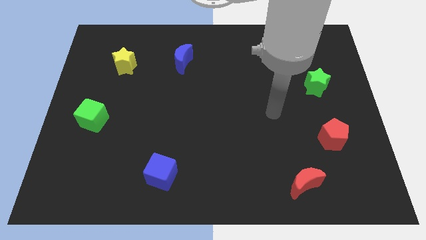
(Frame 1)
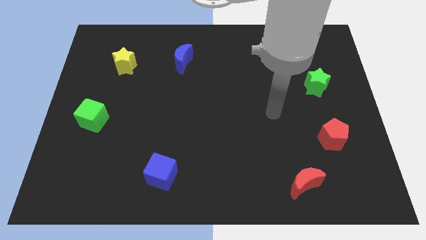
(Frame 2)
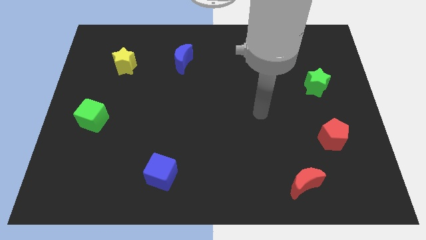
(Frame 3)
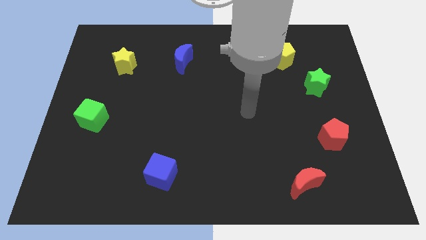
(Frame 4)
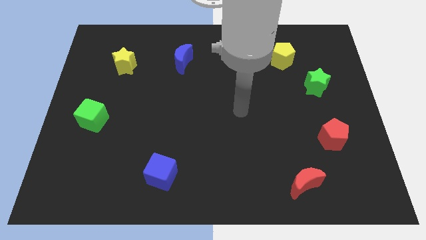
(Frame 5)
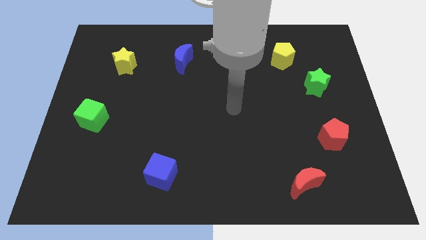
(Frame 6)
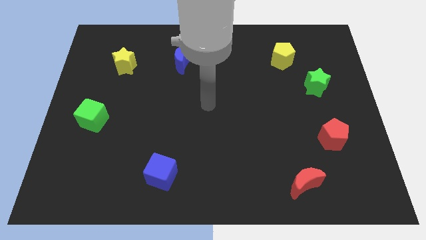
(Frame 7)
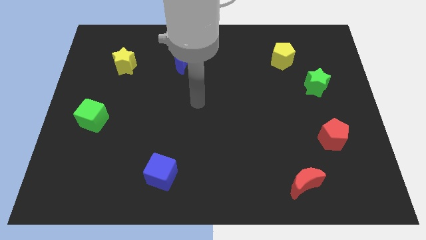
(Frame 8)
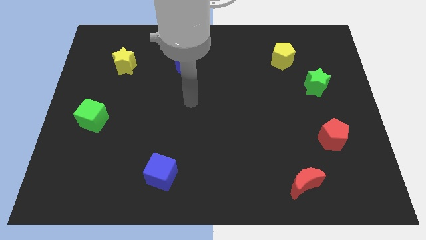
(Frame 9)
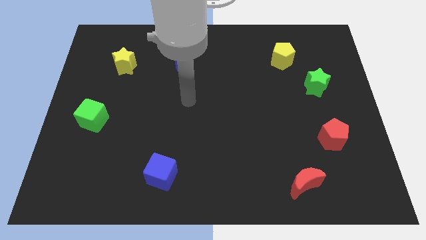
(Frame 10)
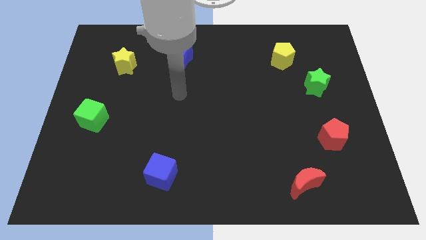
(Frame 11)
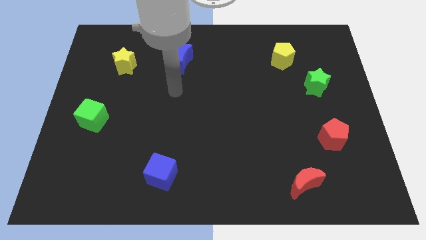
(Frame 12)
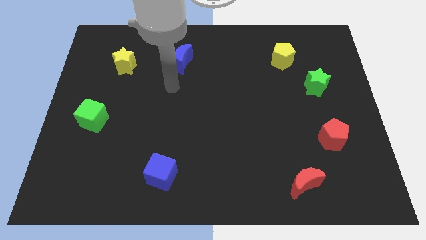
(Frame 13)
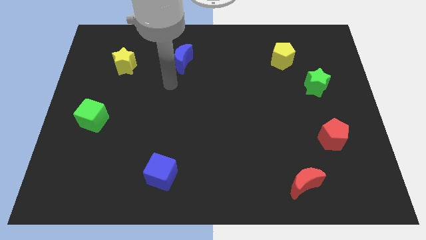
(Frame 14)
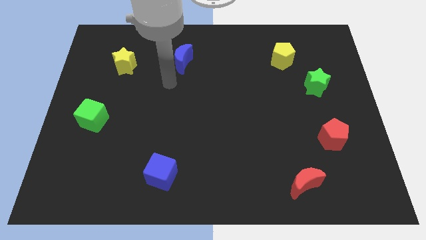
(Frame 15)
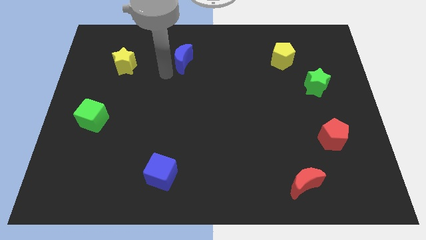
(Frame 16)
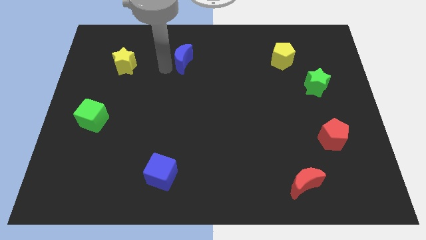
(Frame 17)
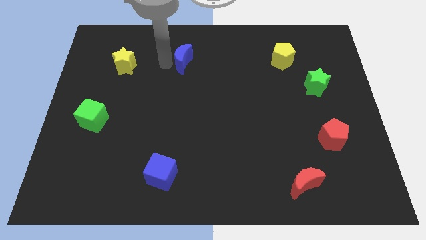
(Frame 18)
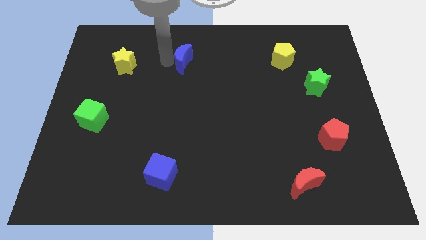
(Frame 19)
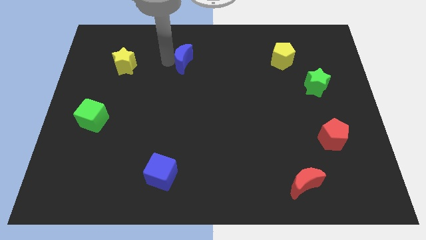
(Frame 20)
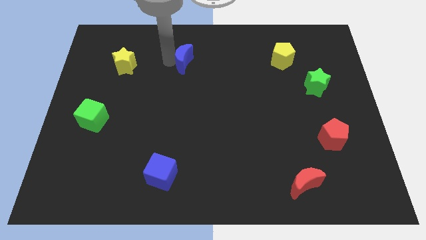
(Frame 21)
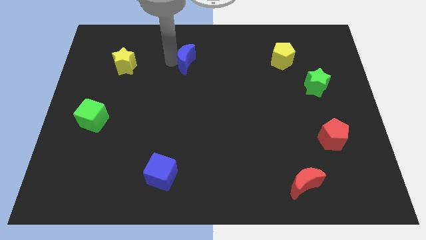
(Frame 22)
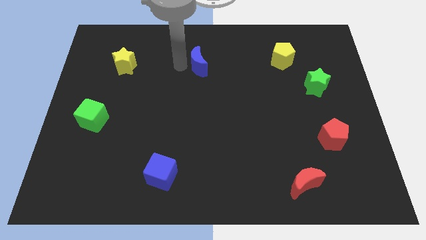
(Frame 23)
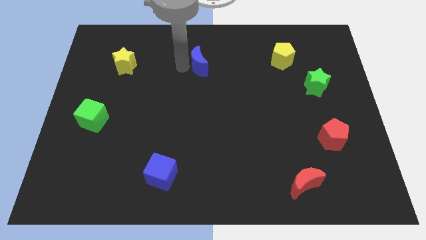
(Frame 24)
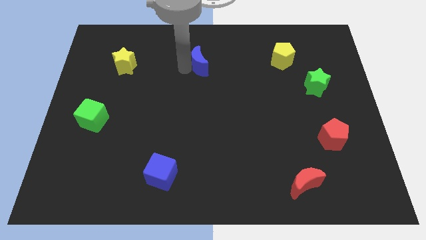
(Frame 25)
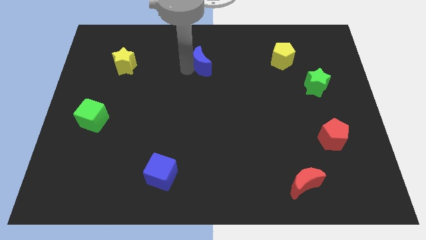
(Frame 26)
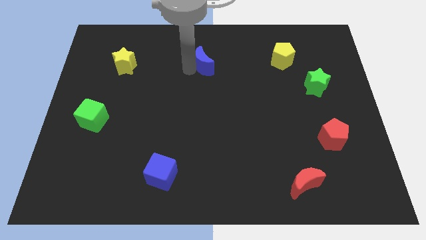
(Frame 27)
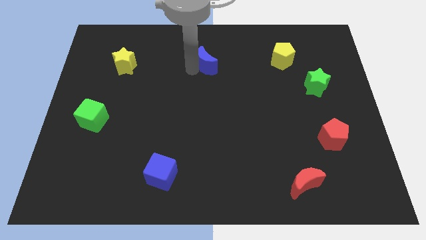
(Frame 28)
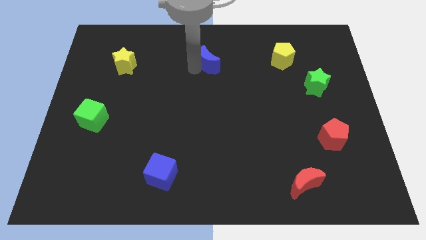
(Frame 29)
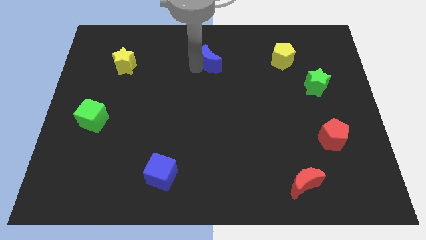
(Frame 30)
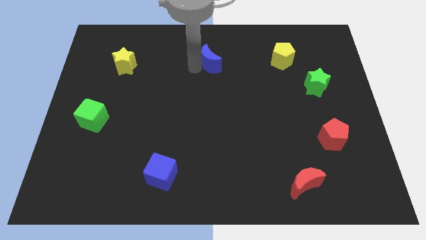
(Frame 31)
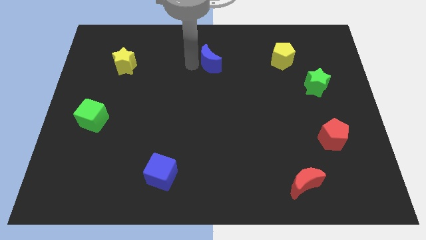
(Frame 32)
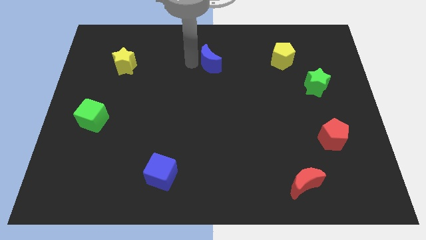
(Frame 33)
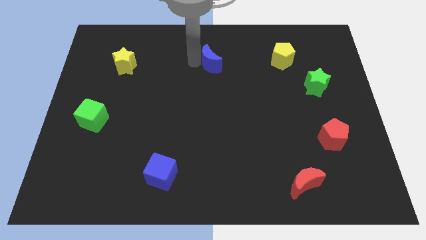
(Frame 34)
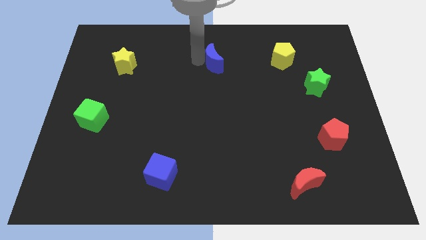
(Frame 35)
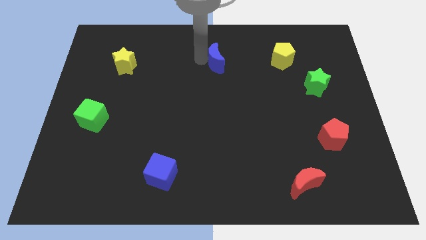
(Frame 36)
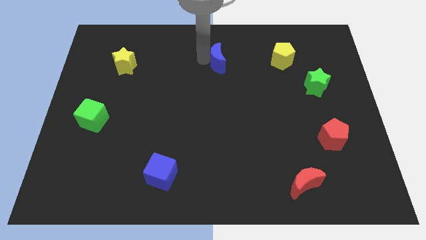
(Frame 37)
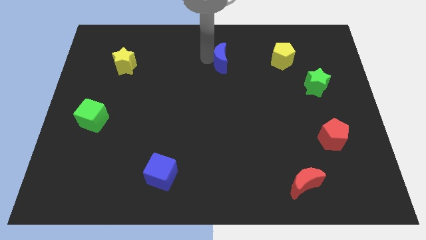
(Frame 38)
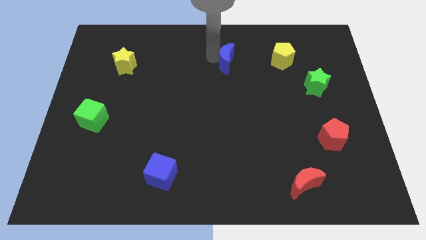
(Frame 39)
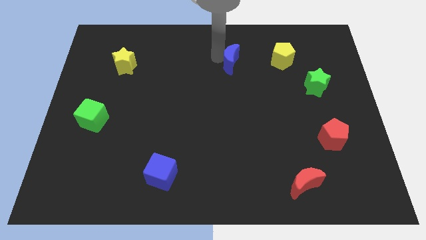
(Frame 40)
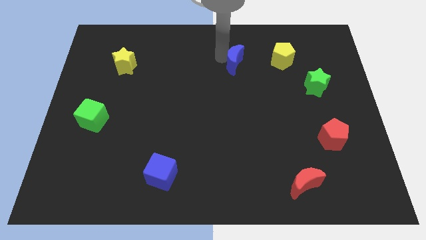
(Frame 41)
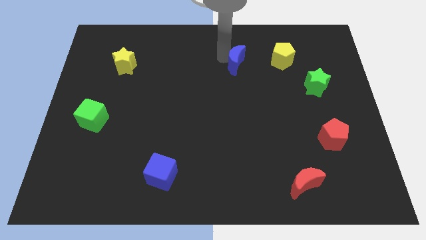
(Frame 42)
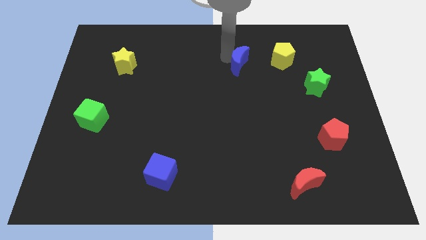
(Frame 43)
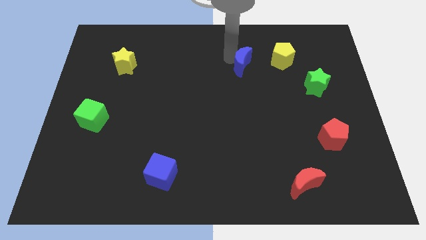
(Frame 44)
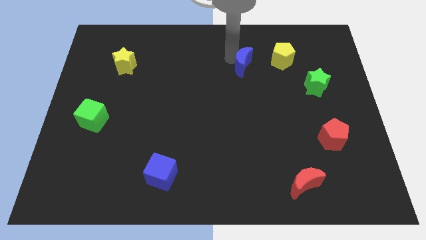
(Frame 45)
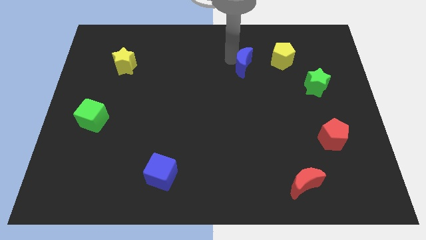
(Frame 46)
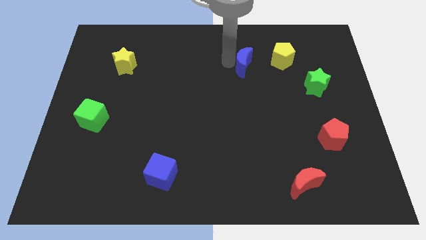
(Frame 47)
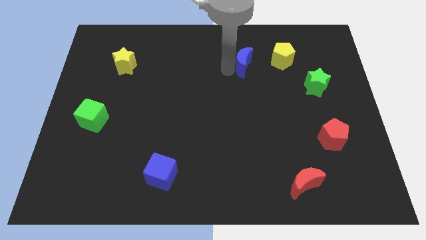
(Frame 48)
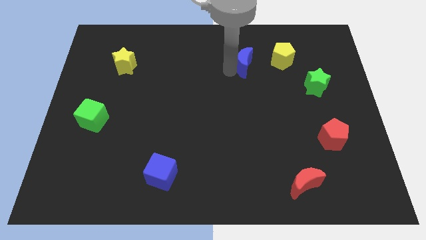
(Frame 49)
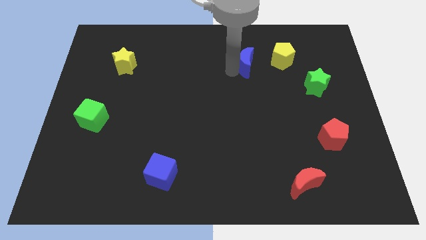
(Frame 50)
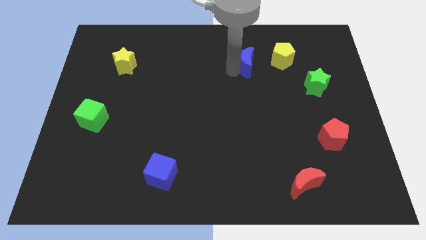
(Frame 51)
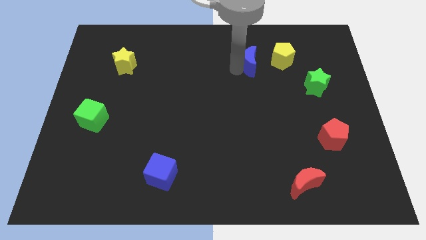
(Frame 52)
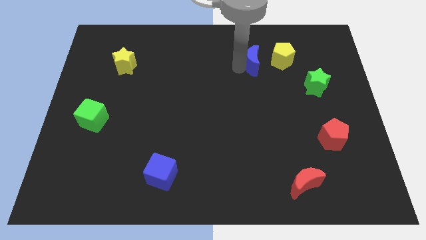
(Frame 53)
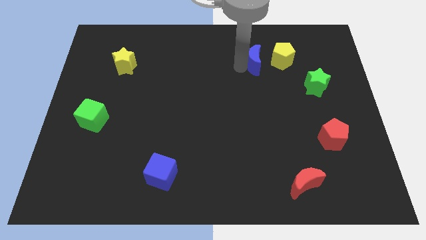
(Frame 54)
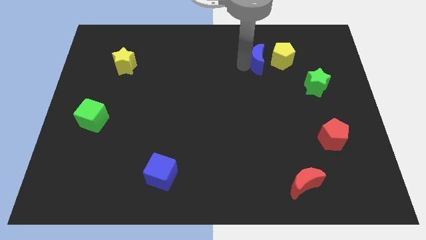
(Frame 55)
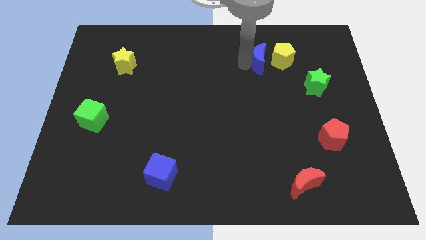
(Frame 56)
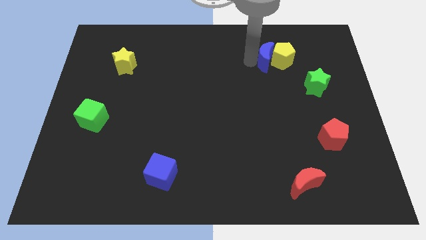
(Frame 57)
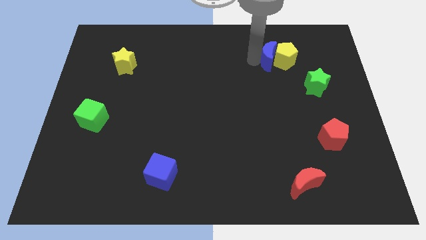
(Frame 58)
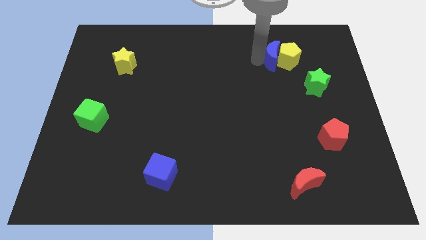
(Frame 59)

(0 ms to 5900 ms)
move the blue moon close to the yellow pentagon

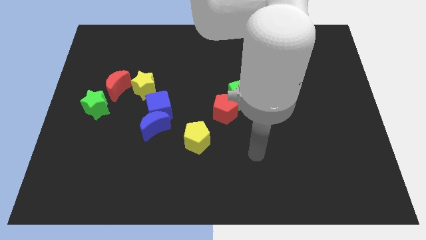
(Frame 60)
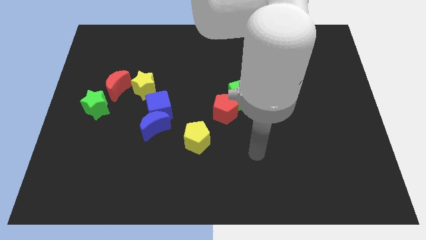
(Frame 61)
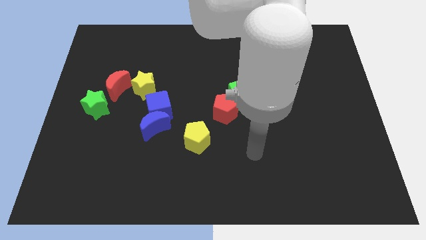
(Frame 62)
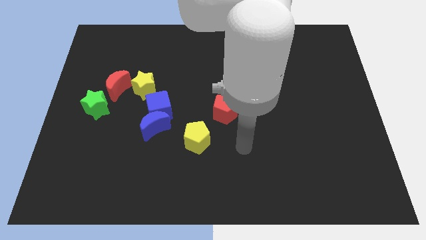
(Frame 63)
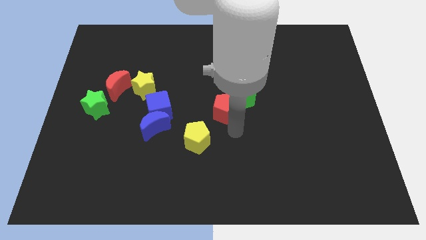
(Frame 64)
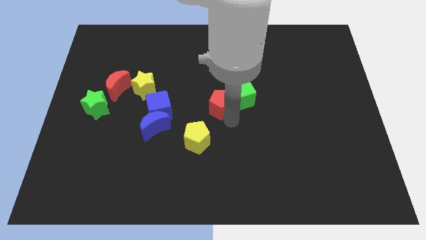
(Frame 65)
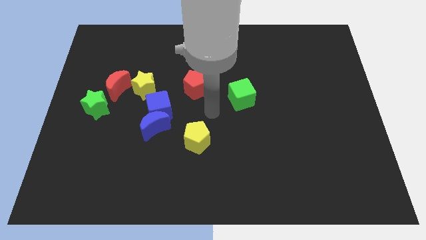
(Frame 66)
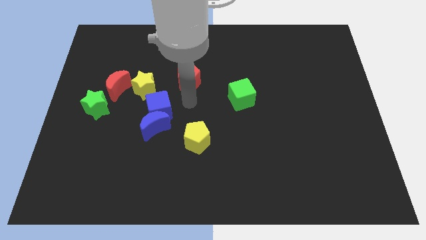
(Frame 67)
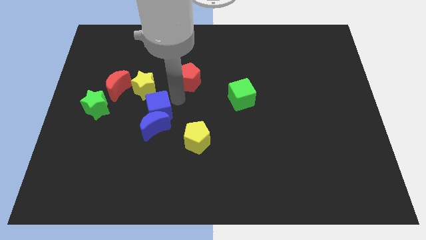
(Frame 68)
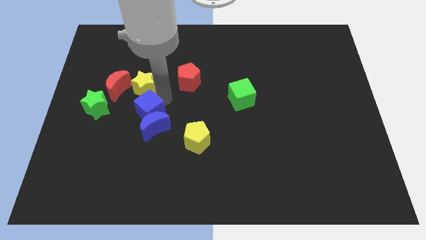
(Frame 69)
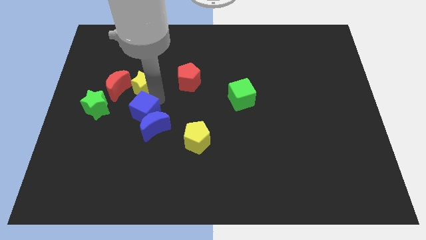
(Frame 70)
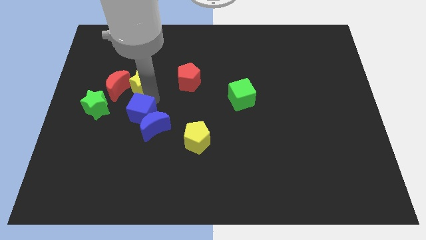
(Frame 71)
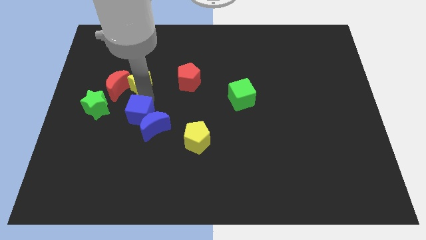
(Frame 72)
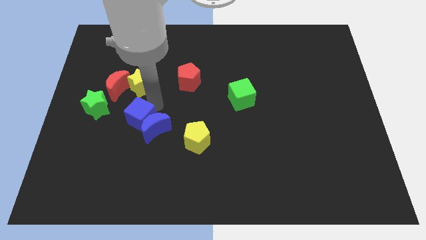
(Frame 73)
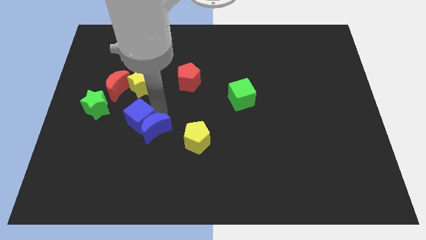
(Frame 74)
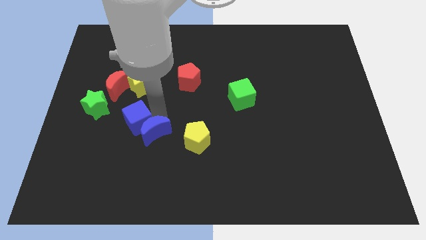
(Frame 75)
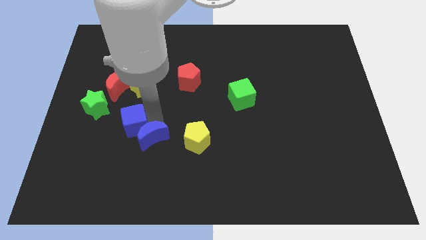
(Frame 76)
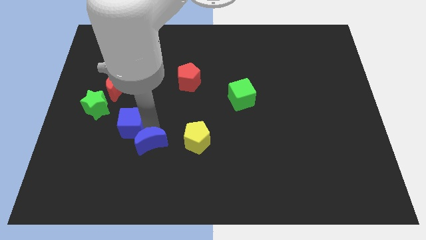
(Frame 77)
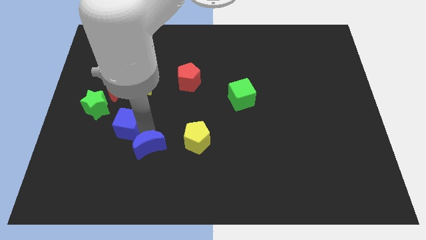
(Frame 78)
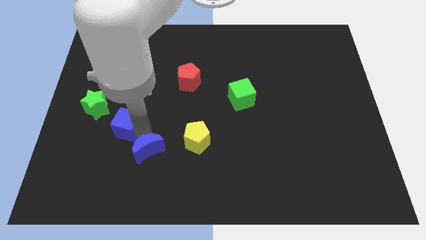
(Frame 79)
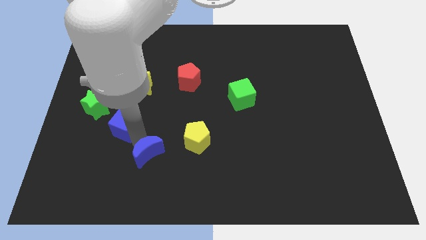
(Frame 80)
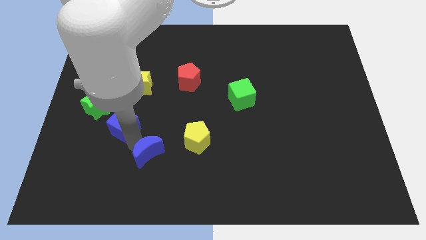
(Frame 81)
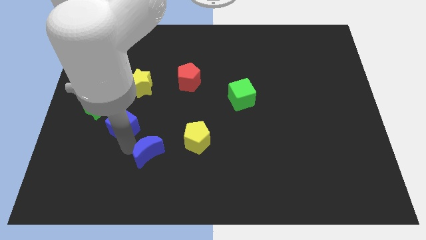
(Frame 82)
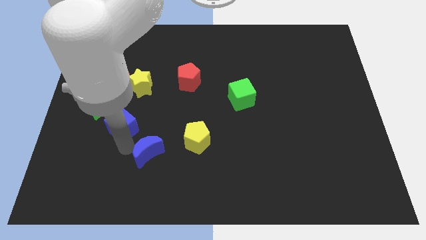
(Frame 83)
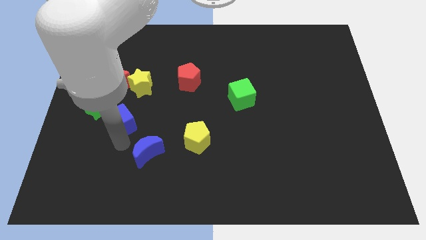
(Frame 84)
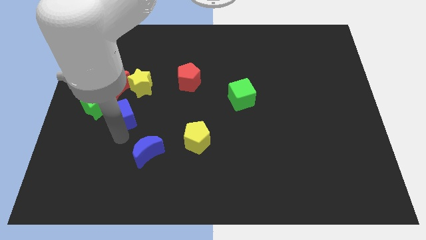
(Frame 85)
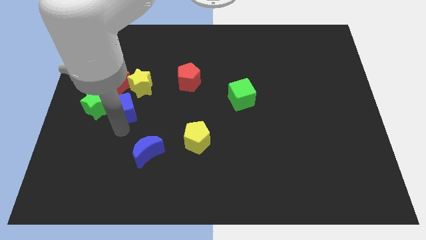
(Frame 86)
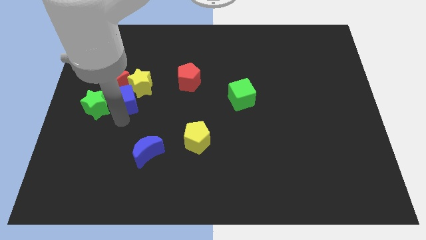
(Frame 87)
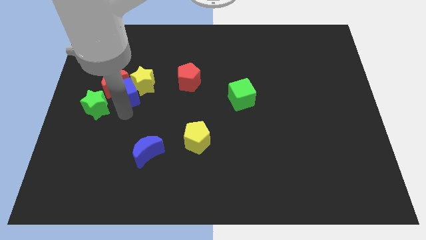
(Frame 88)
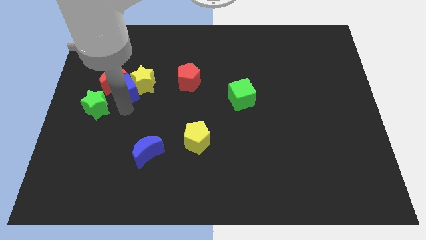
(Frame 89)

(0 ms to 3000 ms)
push the blue cube close to the red moon
